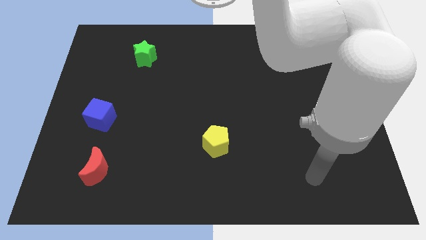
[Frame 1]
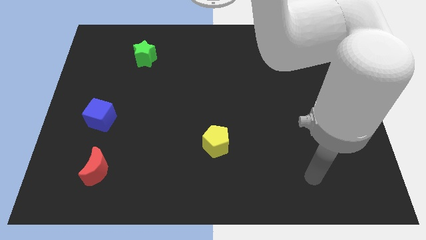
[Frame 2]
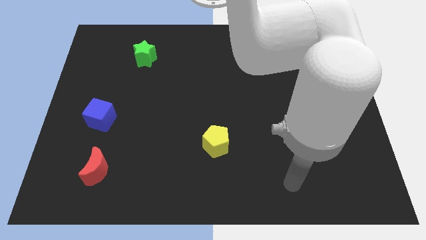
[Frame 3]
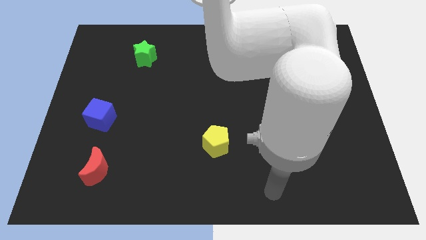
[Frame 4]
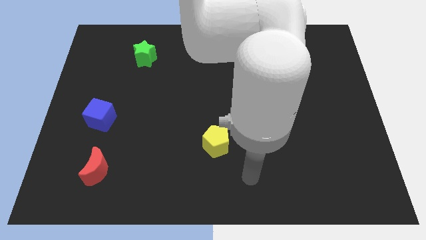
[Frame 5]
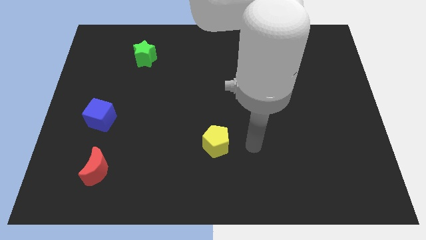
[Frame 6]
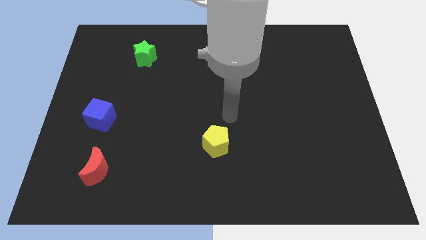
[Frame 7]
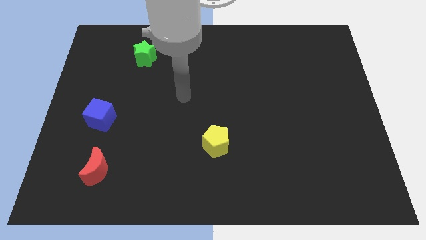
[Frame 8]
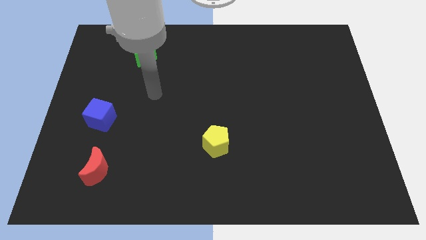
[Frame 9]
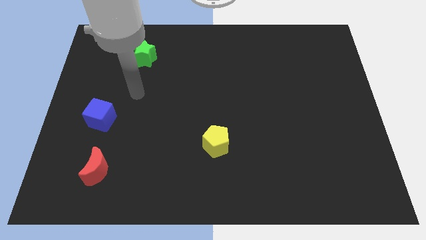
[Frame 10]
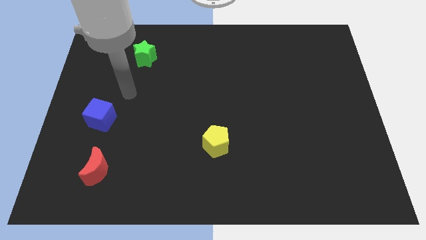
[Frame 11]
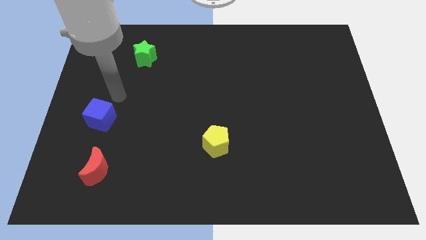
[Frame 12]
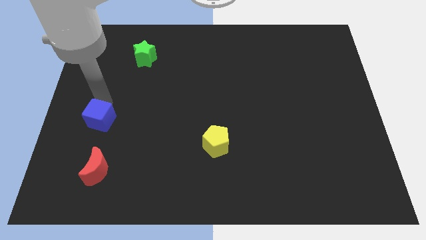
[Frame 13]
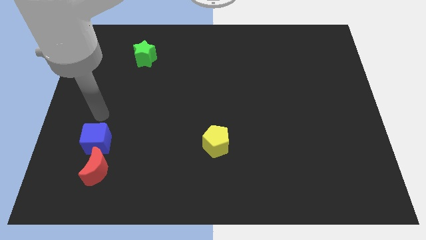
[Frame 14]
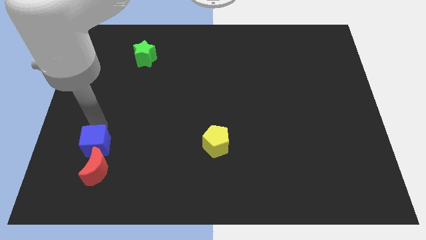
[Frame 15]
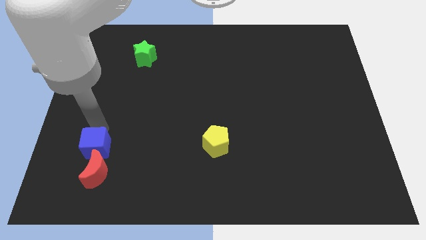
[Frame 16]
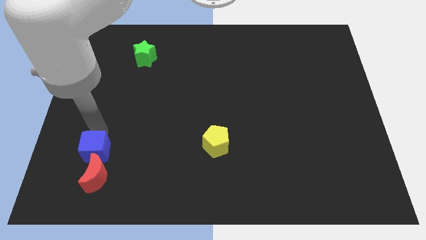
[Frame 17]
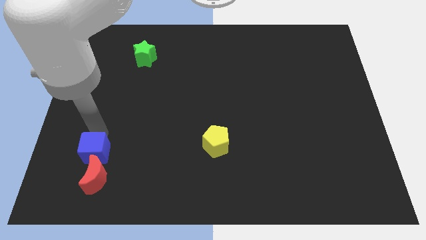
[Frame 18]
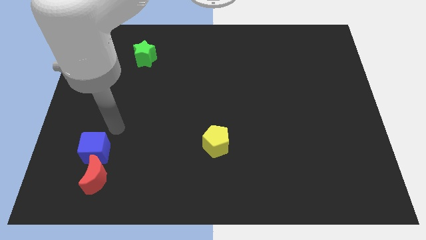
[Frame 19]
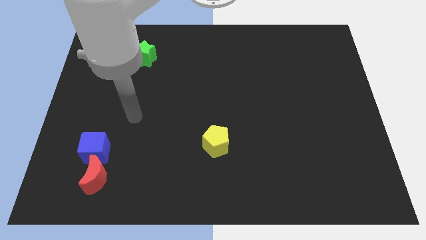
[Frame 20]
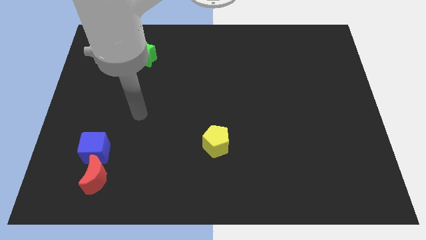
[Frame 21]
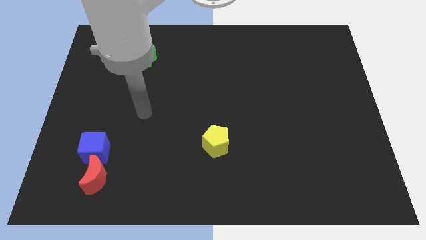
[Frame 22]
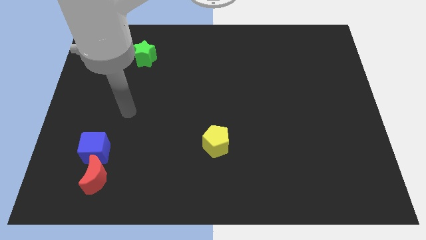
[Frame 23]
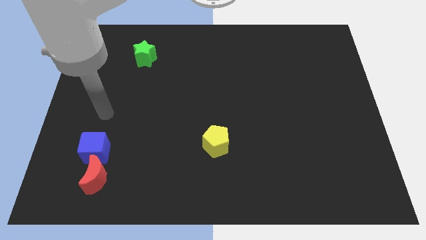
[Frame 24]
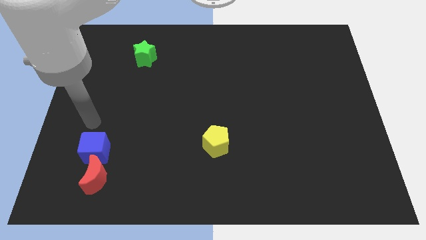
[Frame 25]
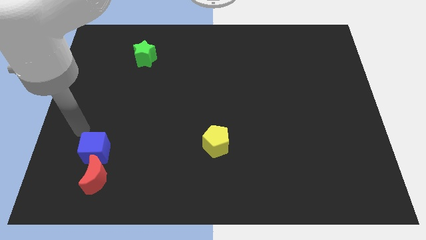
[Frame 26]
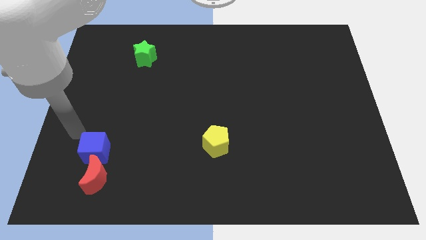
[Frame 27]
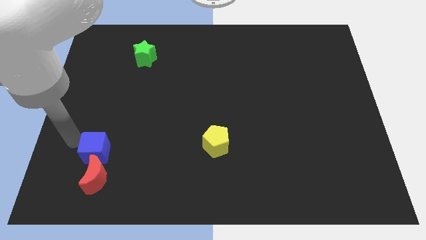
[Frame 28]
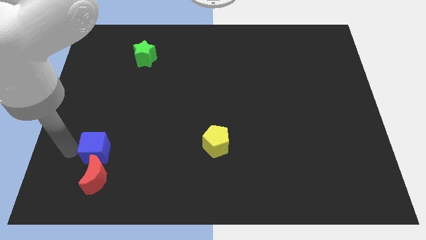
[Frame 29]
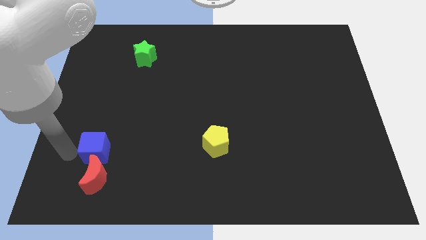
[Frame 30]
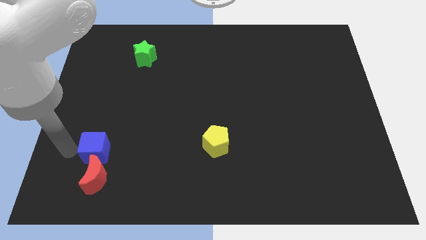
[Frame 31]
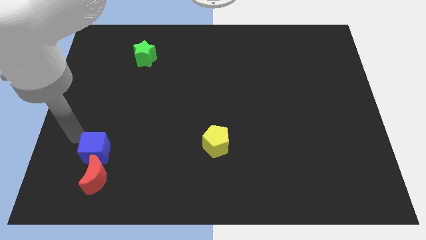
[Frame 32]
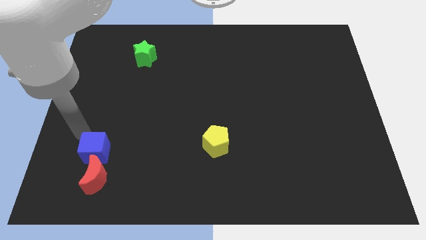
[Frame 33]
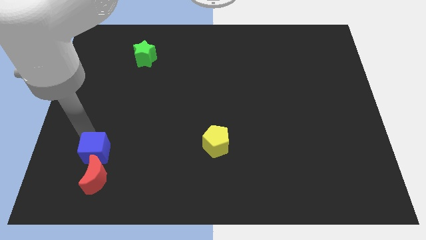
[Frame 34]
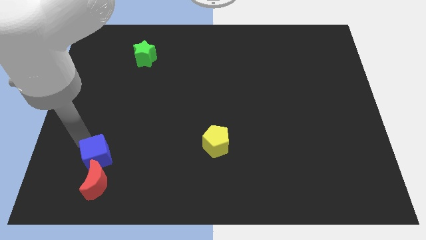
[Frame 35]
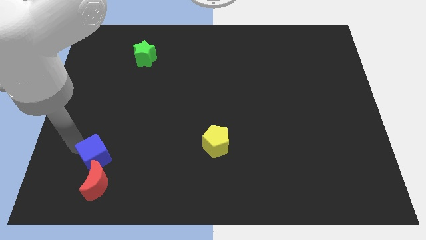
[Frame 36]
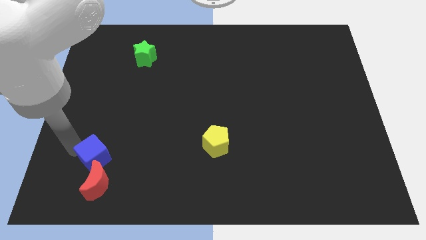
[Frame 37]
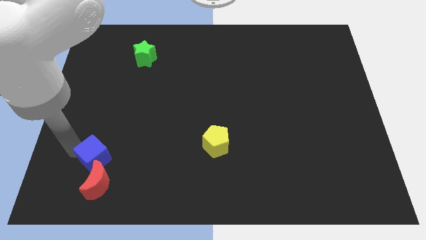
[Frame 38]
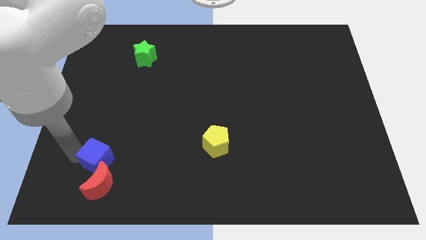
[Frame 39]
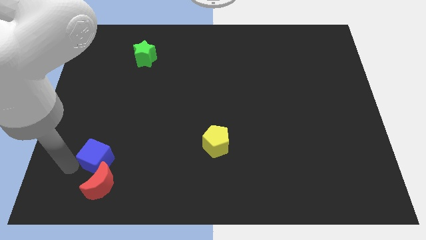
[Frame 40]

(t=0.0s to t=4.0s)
move the blue cube close to the red block

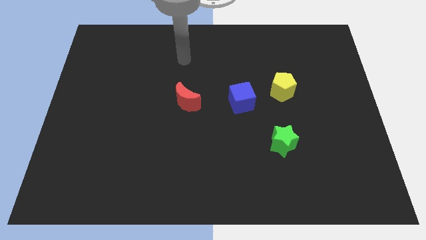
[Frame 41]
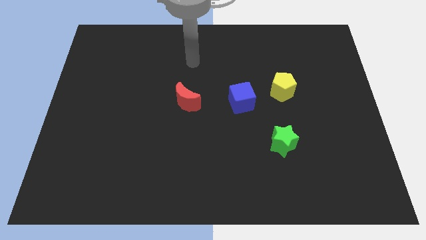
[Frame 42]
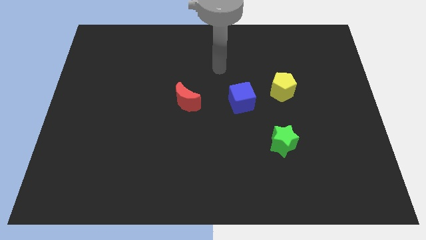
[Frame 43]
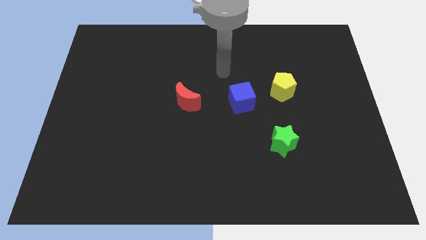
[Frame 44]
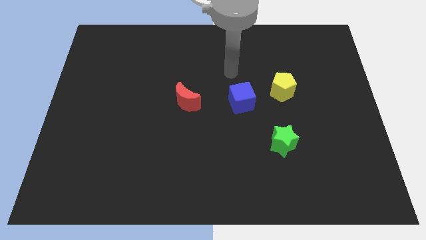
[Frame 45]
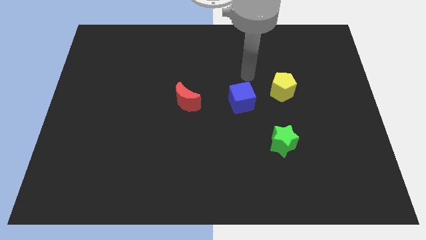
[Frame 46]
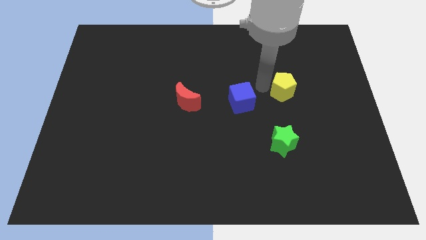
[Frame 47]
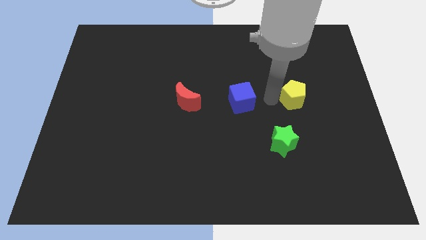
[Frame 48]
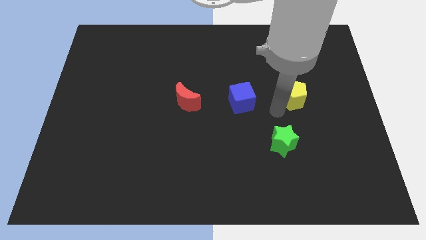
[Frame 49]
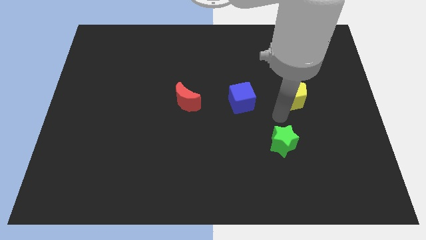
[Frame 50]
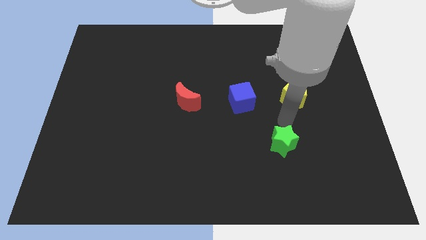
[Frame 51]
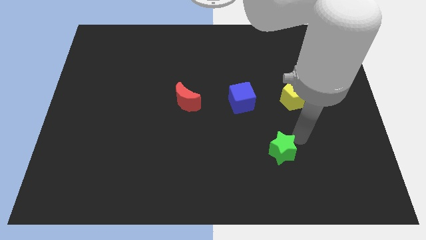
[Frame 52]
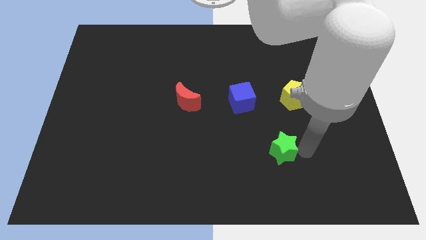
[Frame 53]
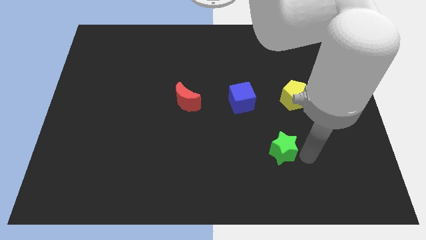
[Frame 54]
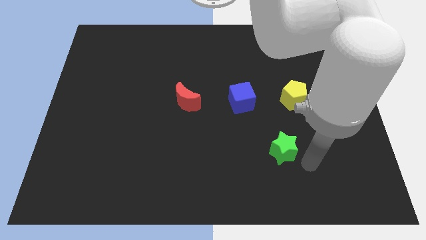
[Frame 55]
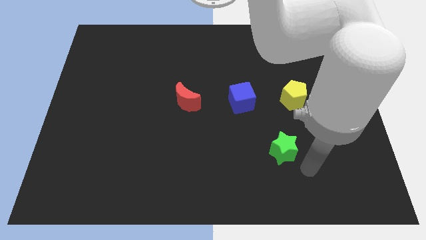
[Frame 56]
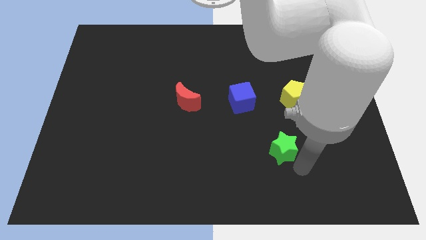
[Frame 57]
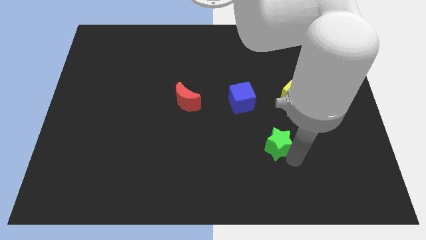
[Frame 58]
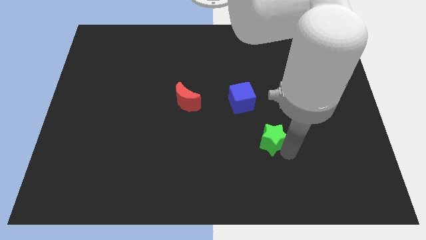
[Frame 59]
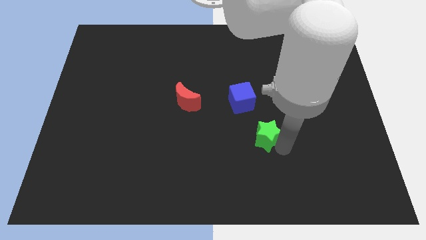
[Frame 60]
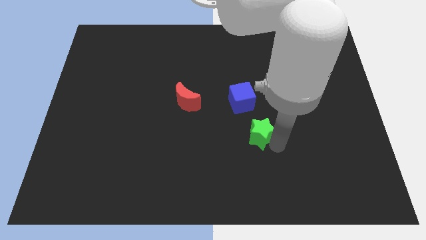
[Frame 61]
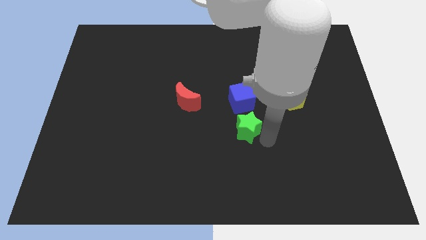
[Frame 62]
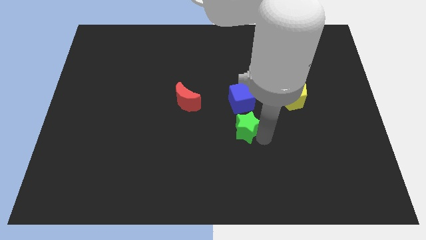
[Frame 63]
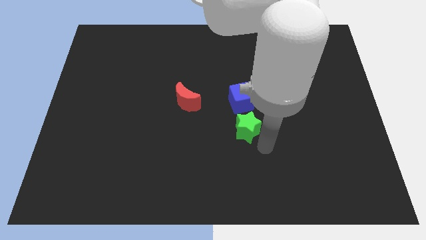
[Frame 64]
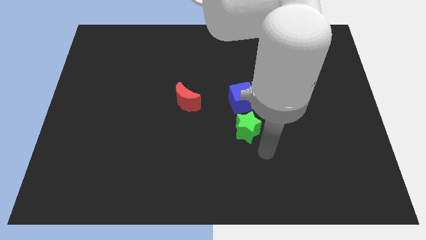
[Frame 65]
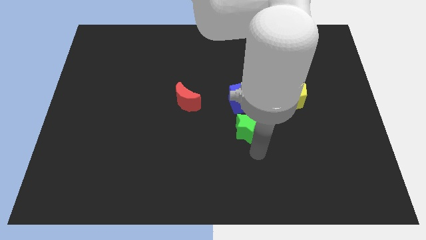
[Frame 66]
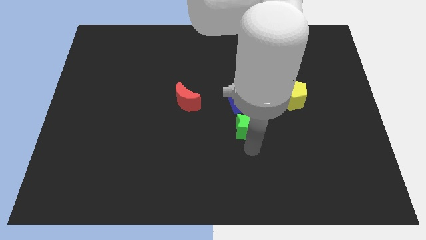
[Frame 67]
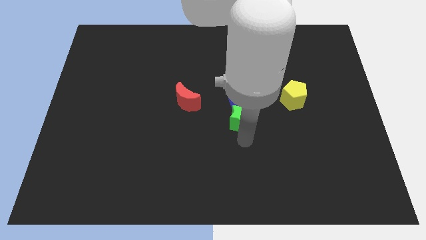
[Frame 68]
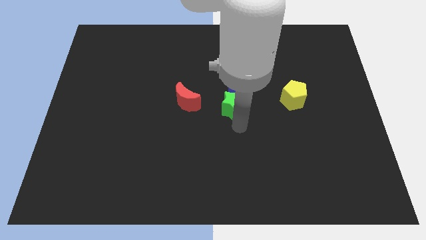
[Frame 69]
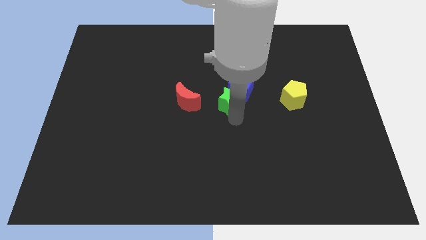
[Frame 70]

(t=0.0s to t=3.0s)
push the star next to the cube

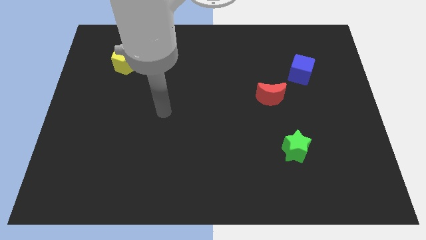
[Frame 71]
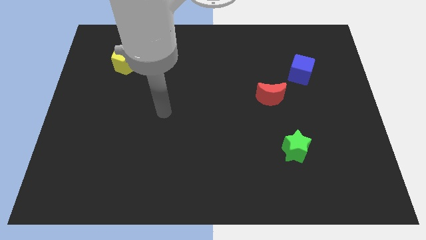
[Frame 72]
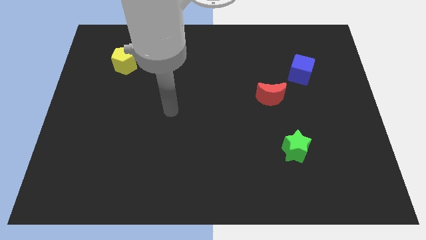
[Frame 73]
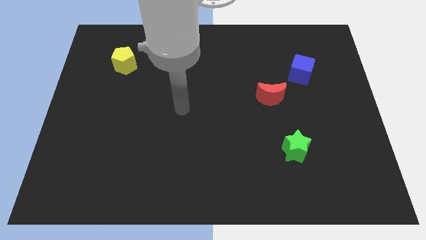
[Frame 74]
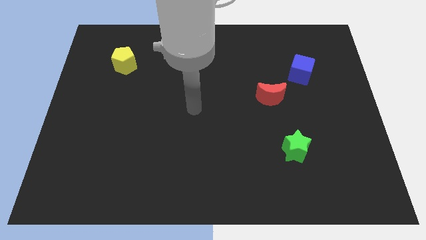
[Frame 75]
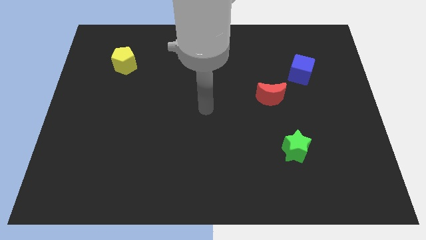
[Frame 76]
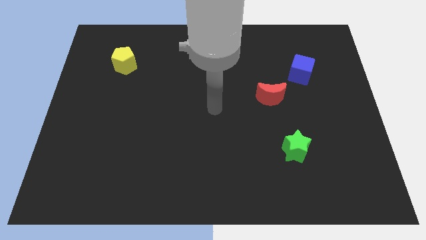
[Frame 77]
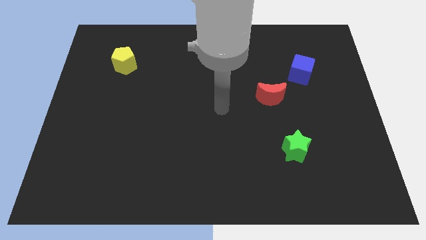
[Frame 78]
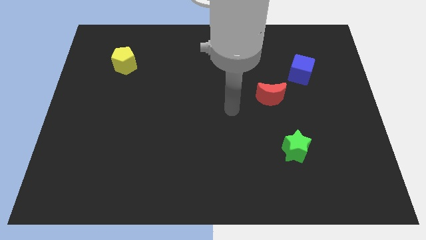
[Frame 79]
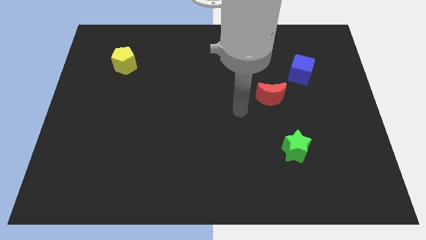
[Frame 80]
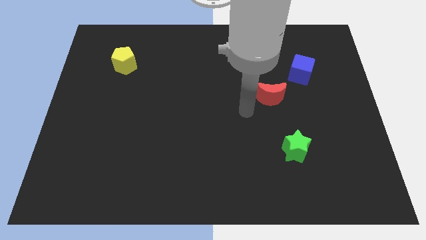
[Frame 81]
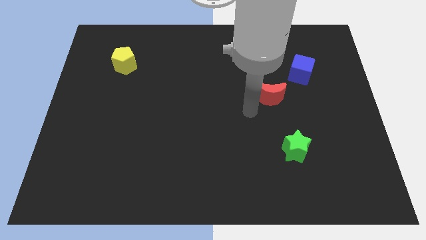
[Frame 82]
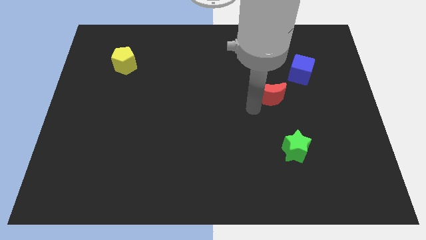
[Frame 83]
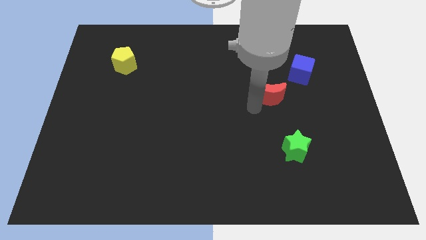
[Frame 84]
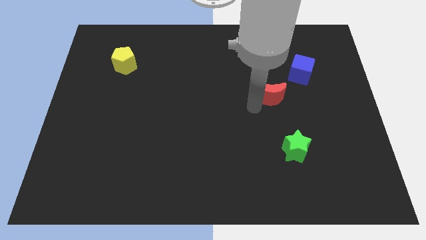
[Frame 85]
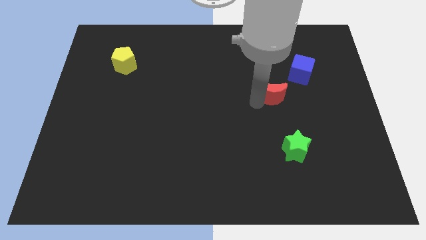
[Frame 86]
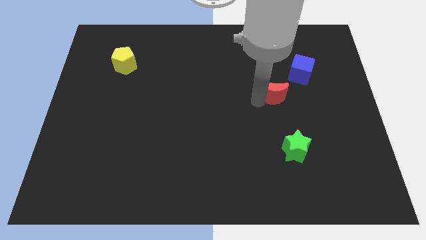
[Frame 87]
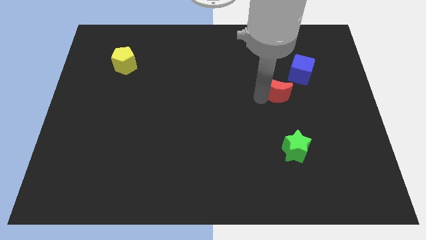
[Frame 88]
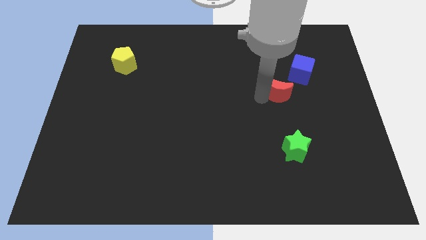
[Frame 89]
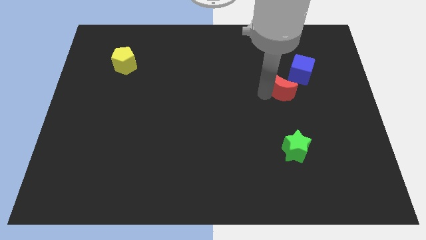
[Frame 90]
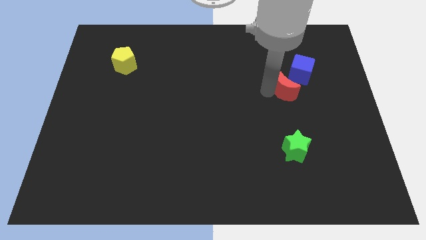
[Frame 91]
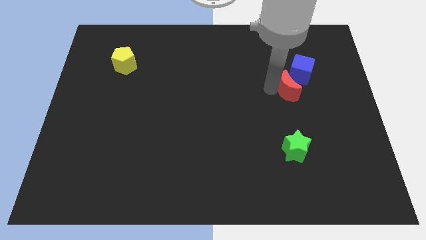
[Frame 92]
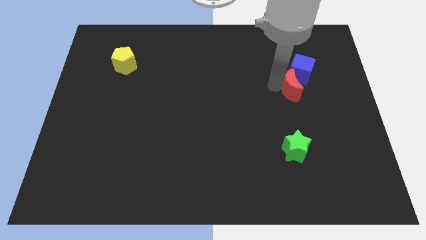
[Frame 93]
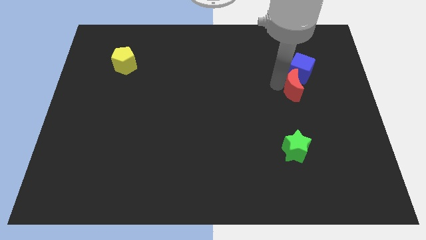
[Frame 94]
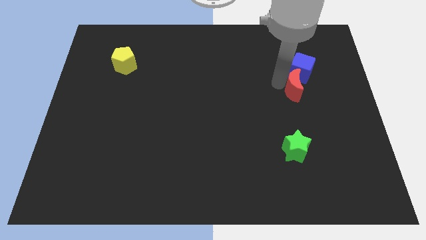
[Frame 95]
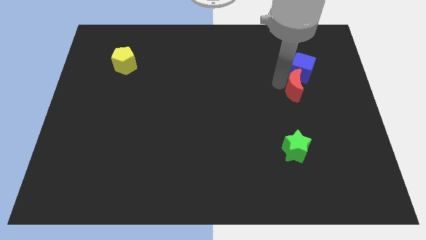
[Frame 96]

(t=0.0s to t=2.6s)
slide the red block close to the blue cube
